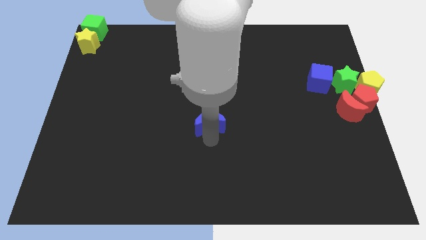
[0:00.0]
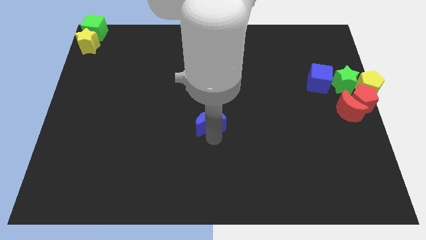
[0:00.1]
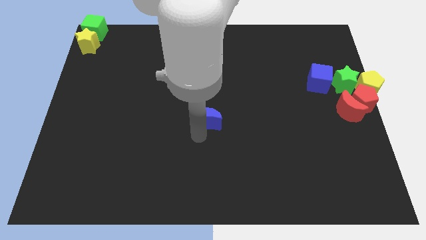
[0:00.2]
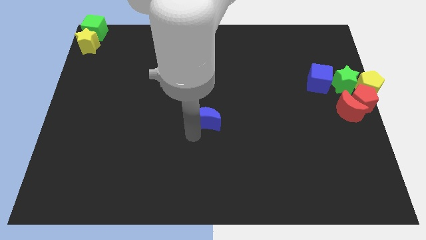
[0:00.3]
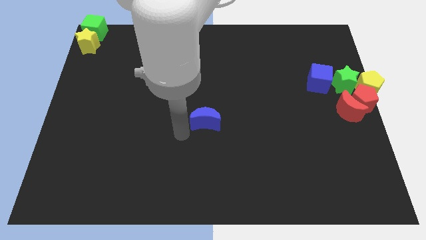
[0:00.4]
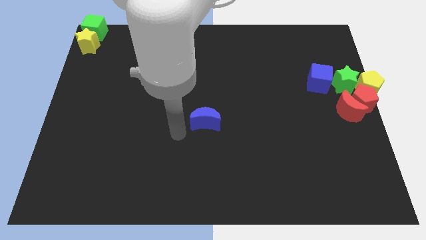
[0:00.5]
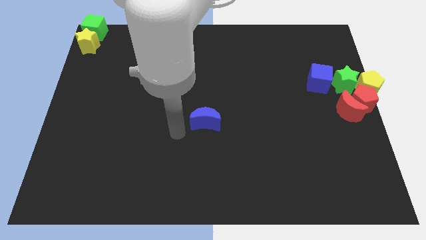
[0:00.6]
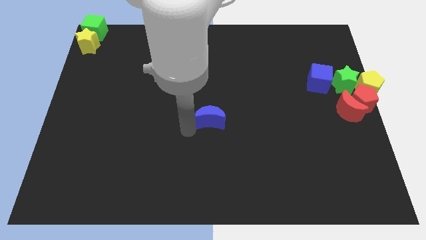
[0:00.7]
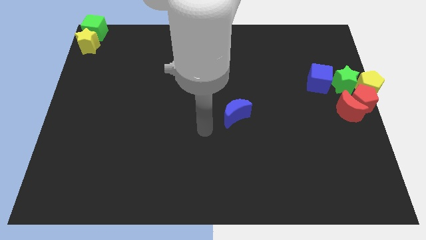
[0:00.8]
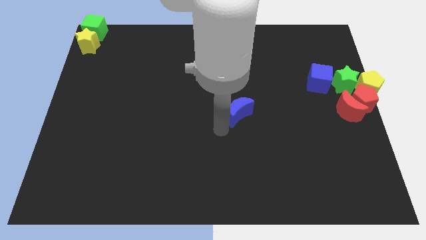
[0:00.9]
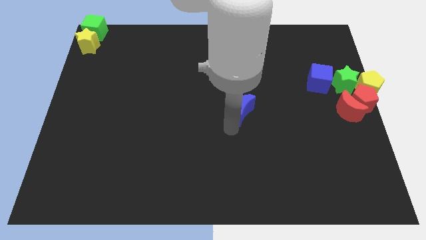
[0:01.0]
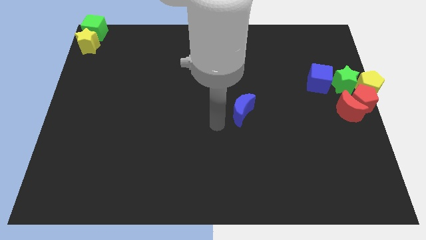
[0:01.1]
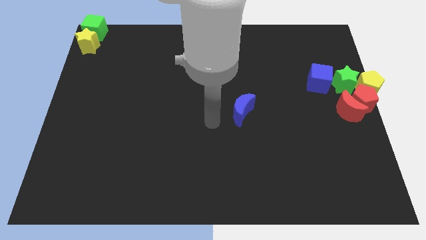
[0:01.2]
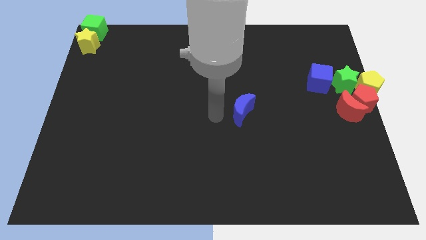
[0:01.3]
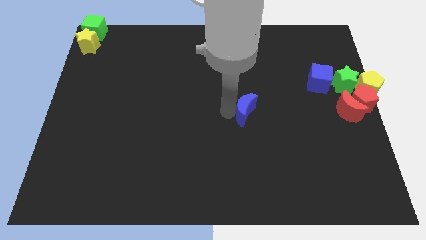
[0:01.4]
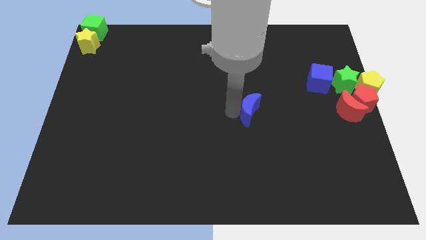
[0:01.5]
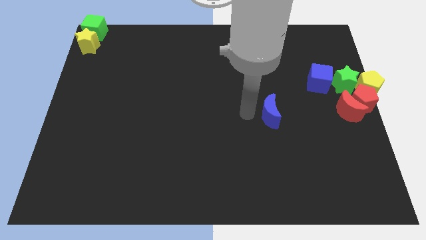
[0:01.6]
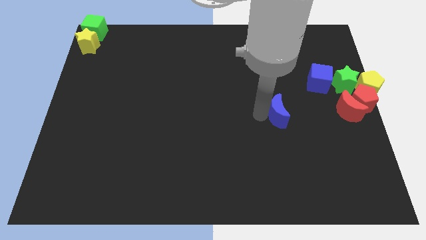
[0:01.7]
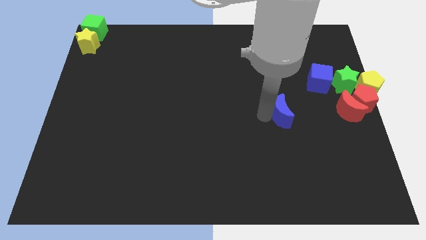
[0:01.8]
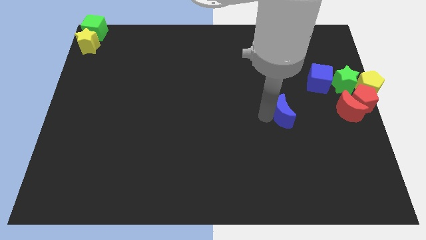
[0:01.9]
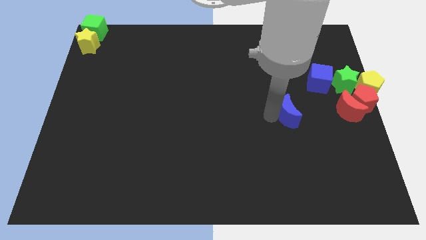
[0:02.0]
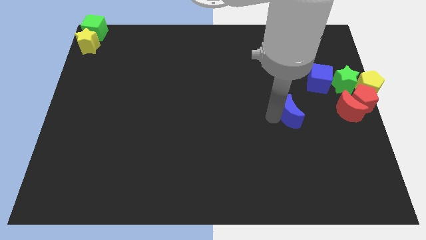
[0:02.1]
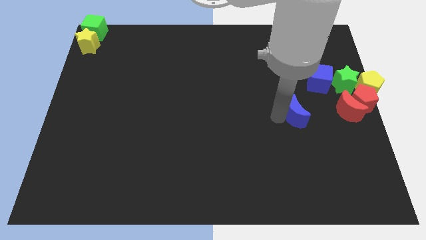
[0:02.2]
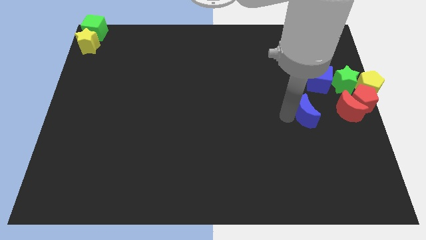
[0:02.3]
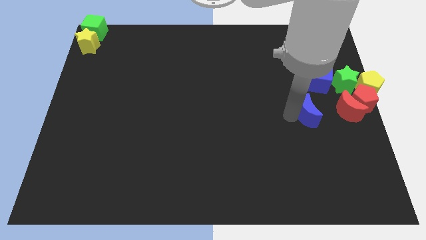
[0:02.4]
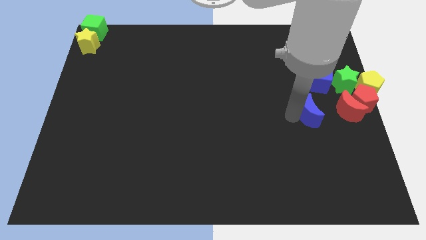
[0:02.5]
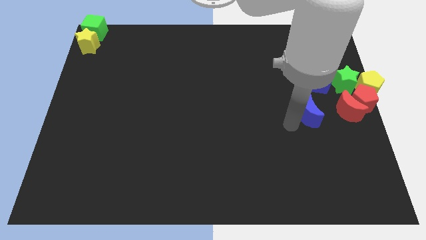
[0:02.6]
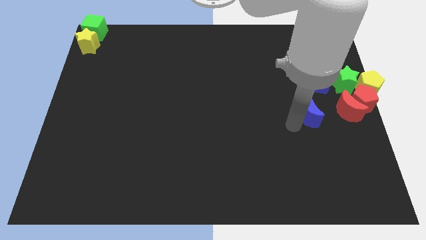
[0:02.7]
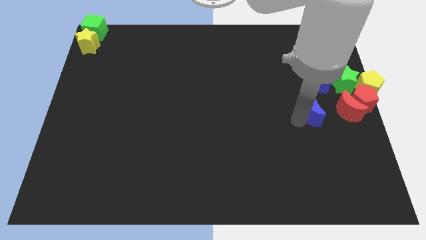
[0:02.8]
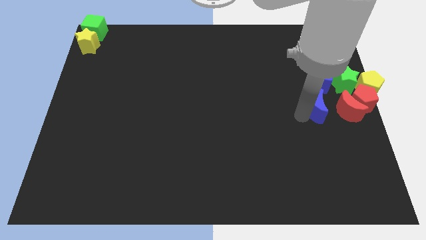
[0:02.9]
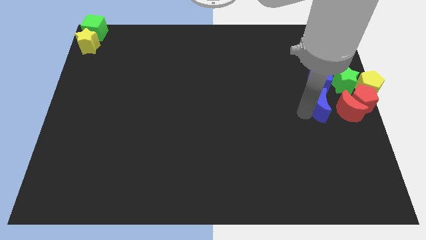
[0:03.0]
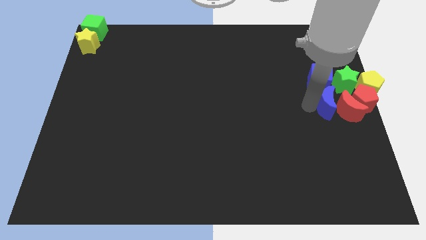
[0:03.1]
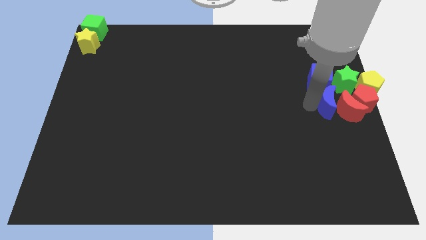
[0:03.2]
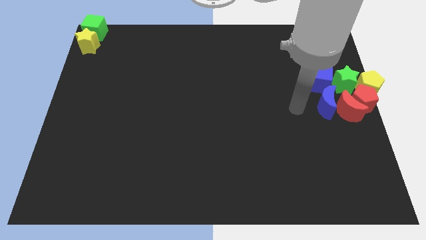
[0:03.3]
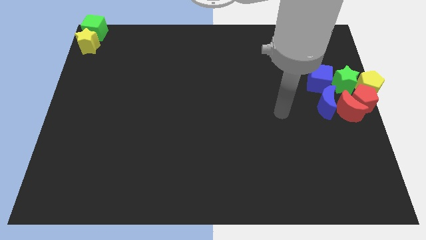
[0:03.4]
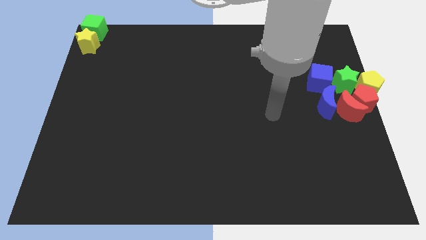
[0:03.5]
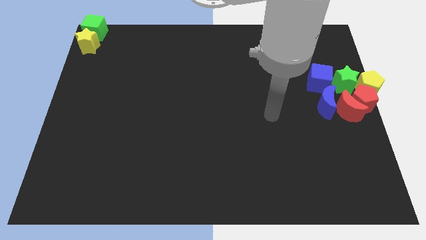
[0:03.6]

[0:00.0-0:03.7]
place the blue moon to the left side of red moon

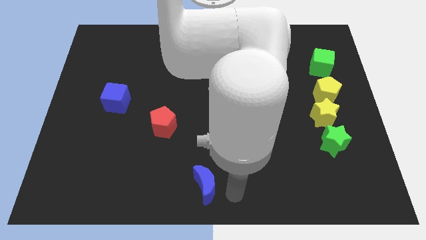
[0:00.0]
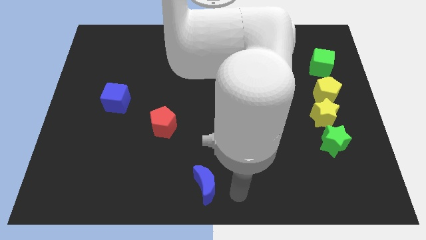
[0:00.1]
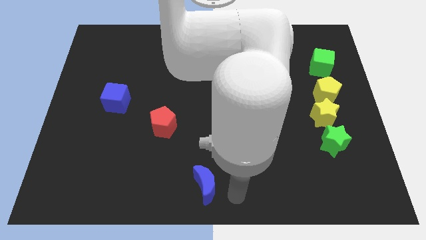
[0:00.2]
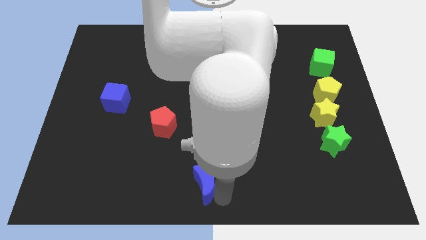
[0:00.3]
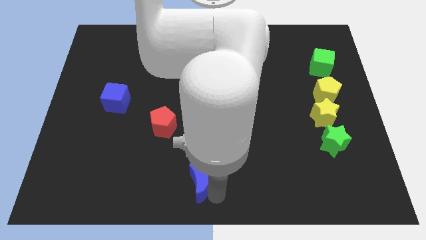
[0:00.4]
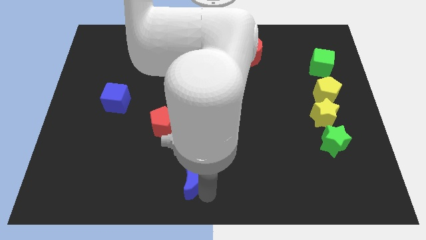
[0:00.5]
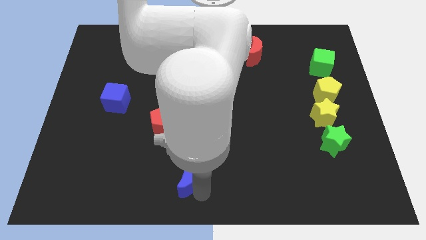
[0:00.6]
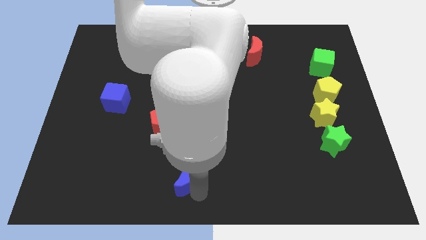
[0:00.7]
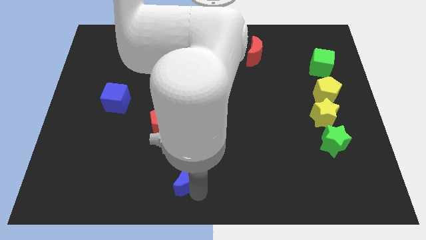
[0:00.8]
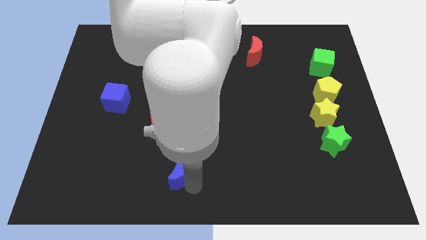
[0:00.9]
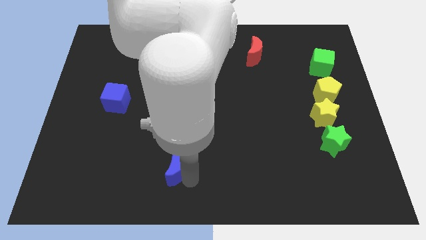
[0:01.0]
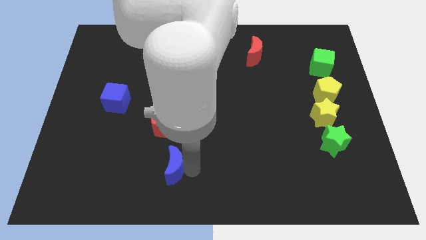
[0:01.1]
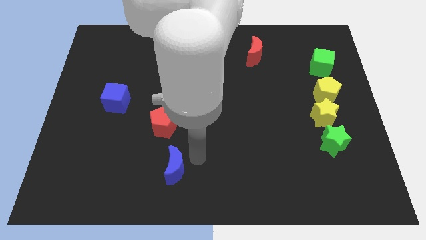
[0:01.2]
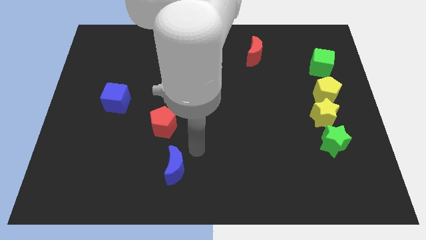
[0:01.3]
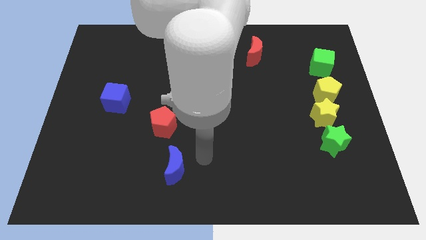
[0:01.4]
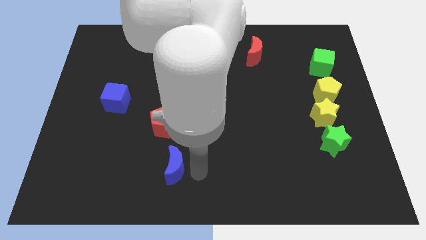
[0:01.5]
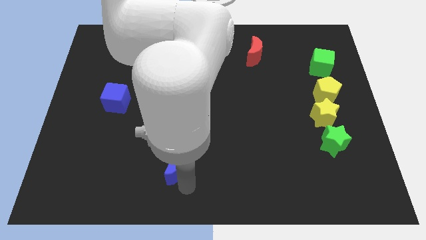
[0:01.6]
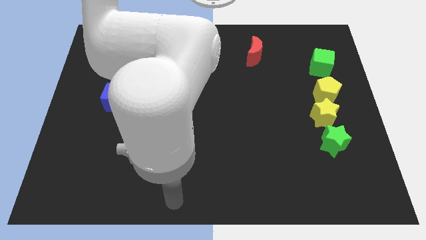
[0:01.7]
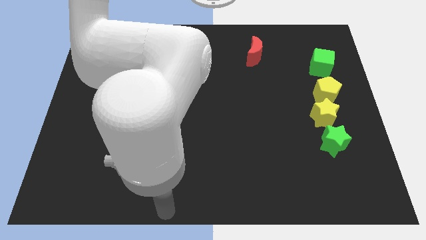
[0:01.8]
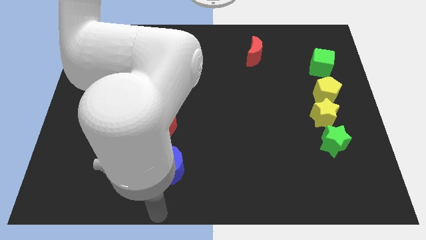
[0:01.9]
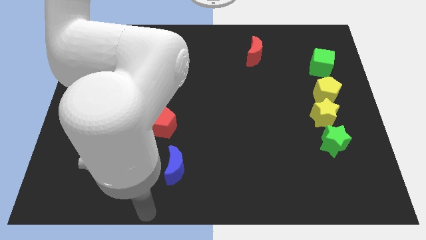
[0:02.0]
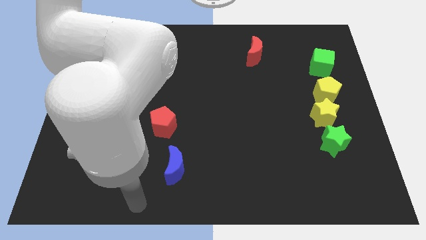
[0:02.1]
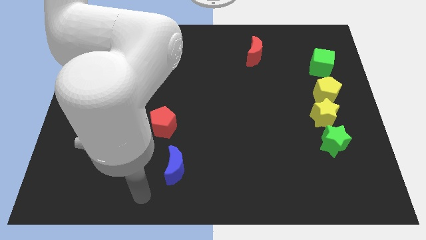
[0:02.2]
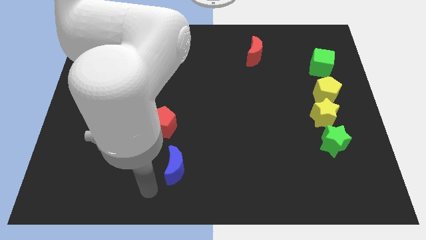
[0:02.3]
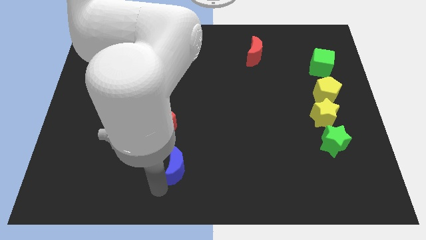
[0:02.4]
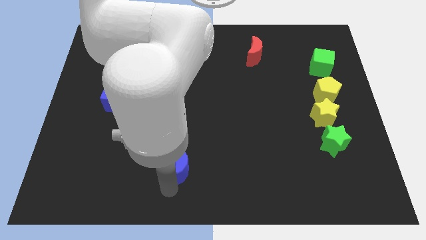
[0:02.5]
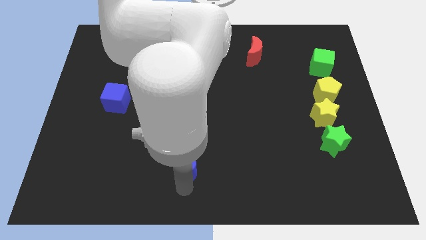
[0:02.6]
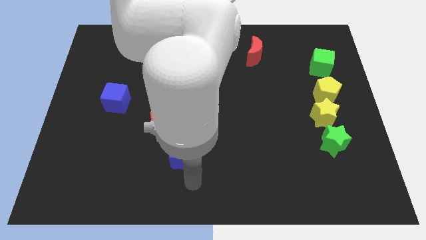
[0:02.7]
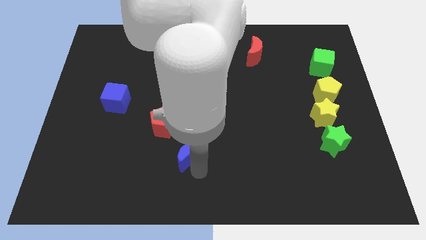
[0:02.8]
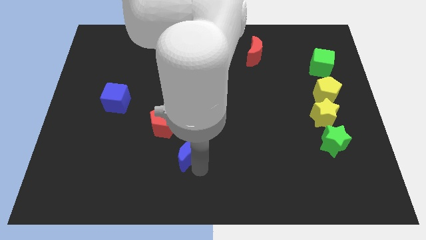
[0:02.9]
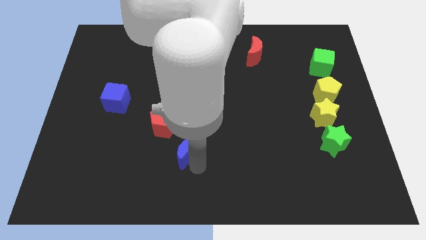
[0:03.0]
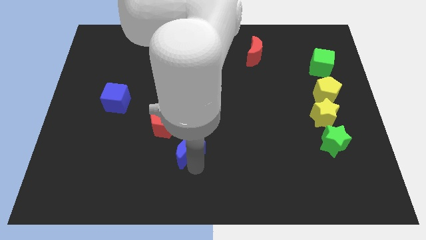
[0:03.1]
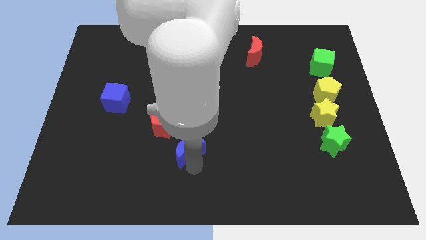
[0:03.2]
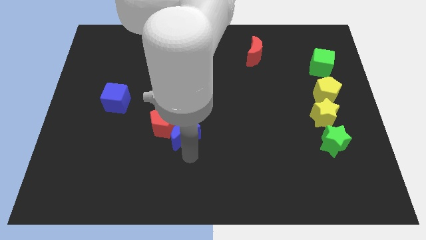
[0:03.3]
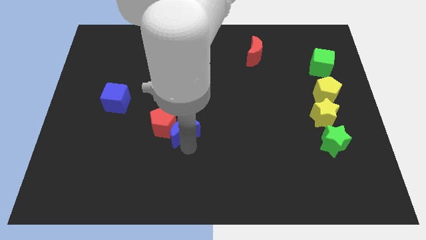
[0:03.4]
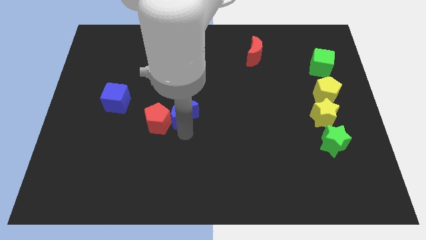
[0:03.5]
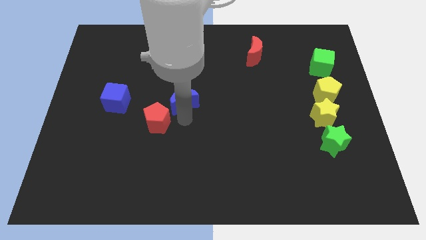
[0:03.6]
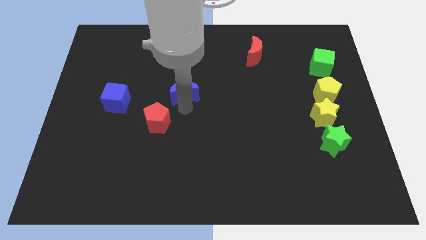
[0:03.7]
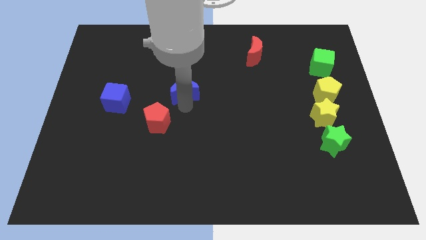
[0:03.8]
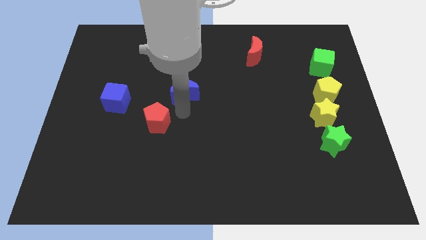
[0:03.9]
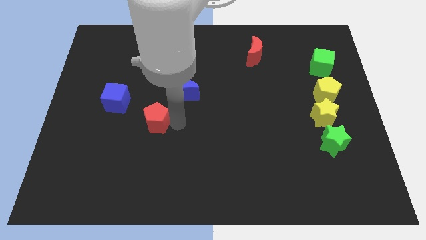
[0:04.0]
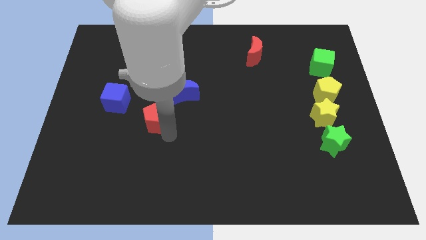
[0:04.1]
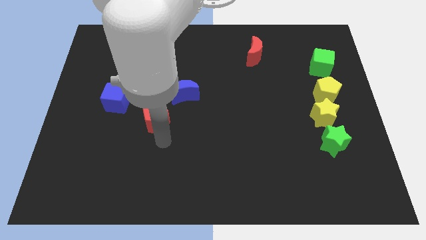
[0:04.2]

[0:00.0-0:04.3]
place the blue crescent to the left of the yellow pentagon

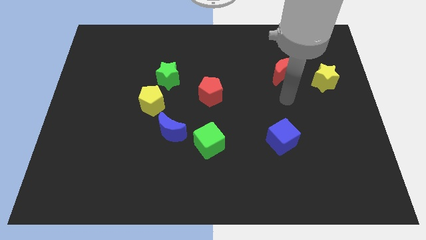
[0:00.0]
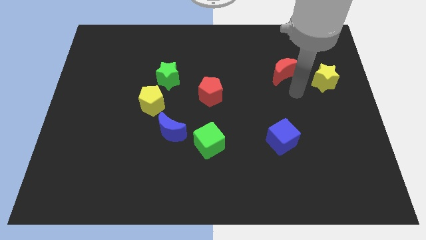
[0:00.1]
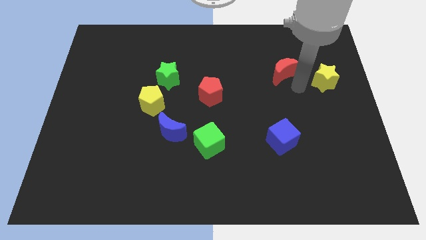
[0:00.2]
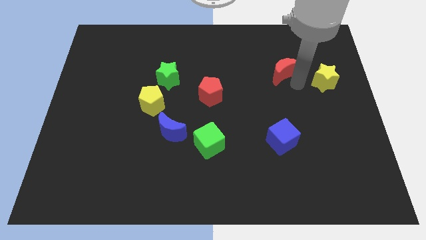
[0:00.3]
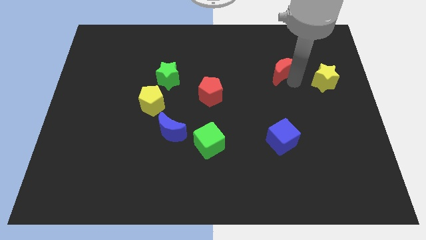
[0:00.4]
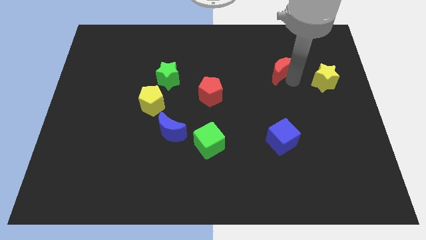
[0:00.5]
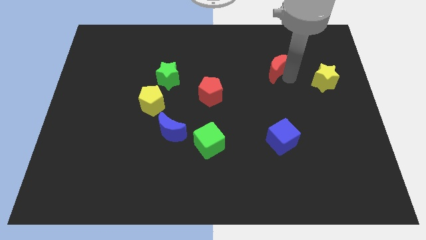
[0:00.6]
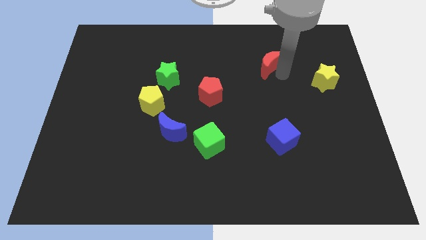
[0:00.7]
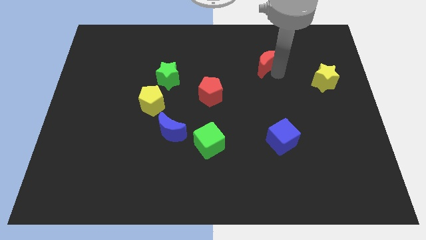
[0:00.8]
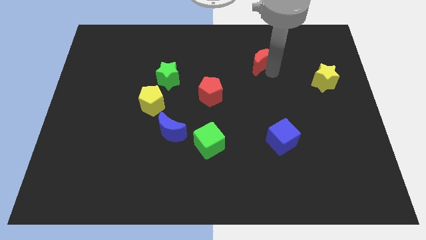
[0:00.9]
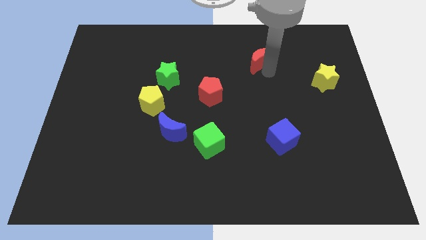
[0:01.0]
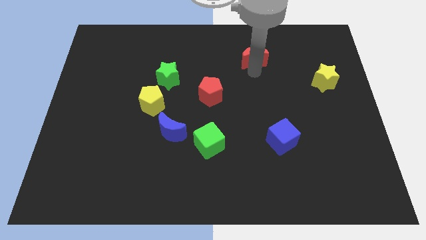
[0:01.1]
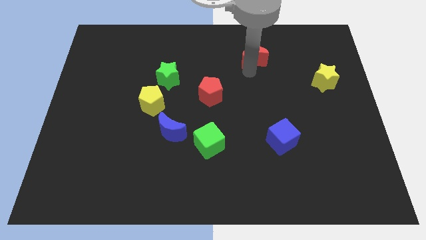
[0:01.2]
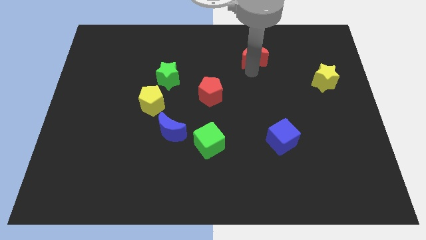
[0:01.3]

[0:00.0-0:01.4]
push the red crescent slightly to the top
